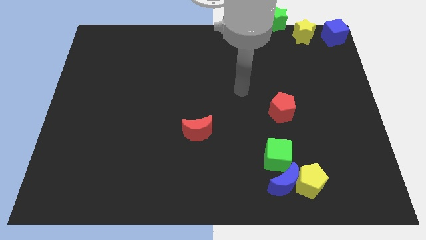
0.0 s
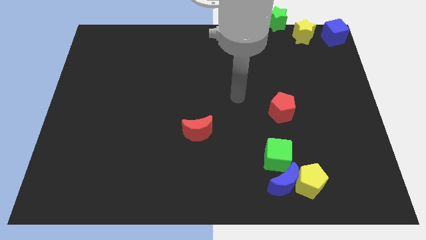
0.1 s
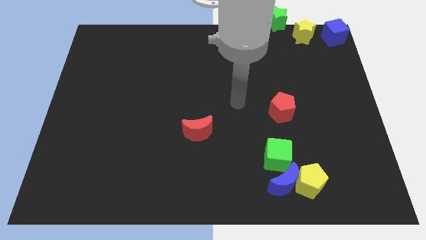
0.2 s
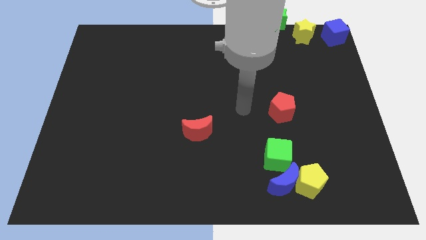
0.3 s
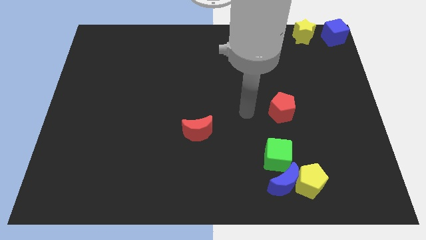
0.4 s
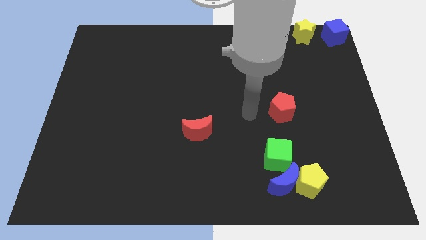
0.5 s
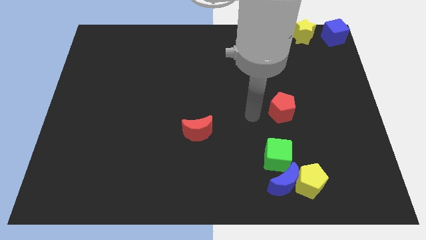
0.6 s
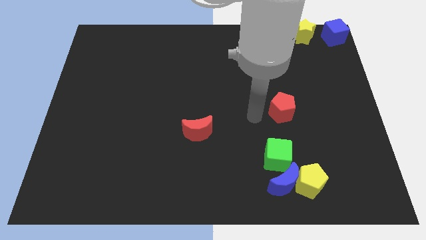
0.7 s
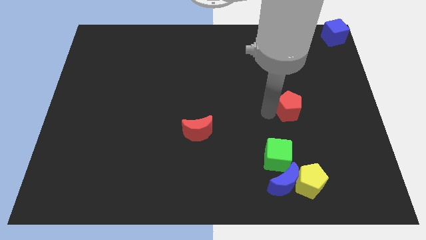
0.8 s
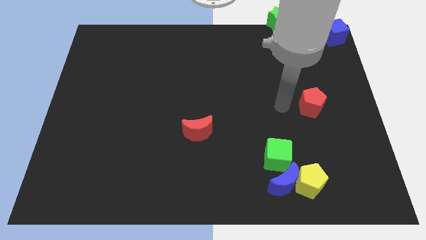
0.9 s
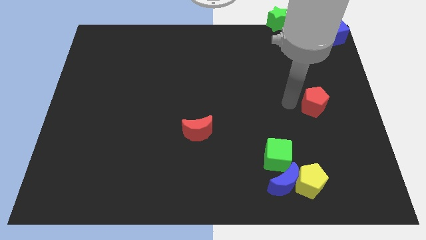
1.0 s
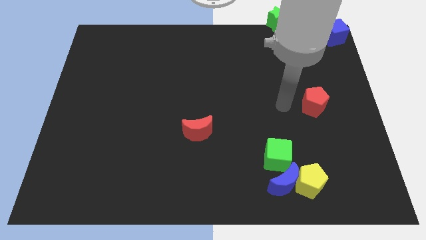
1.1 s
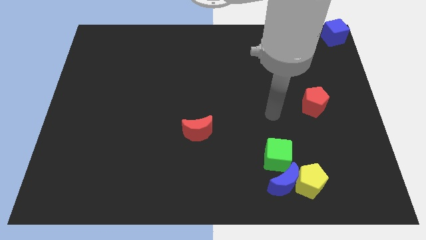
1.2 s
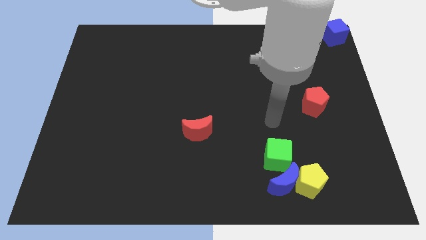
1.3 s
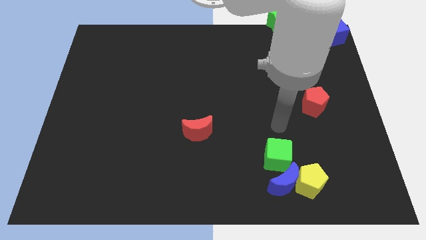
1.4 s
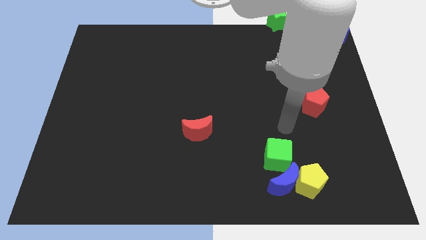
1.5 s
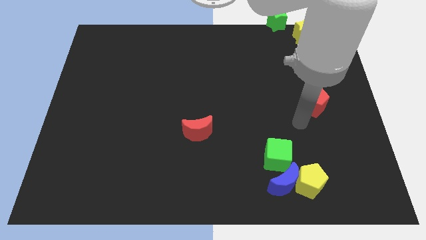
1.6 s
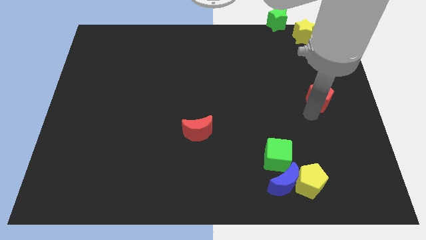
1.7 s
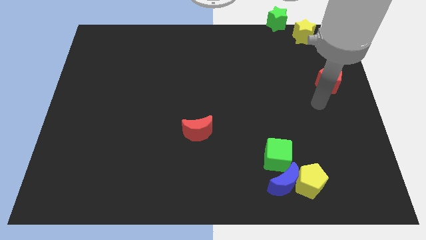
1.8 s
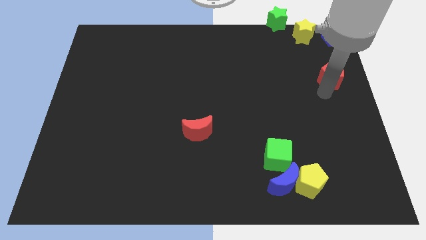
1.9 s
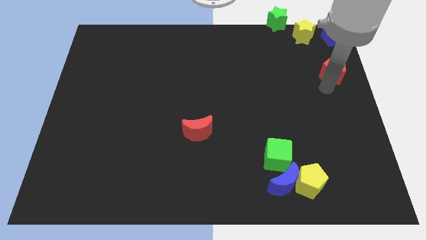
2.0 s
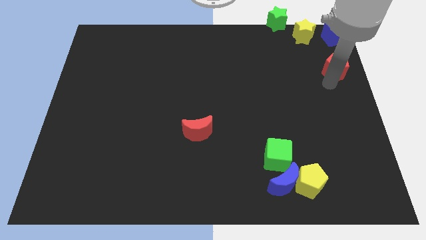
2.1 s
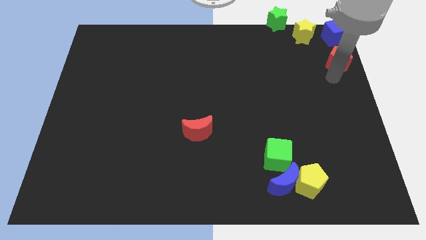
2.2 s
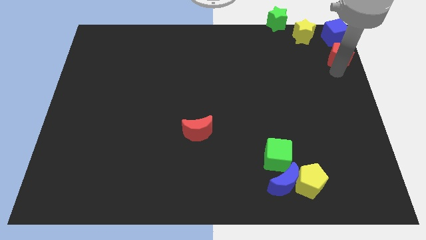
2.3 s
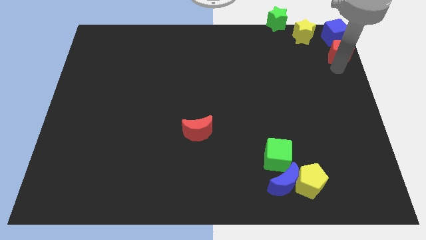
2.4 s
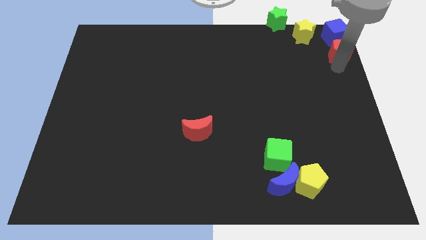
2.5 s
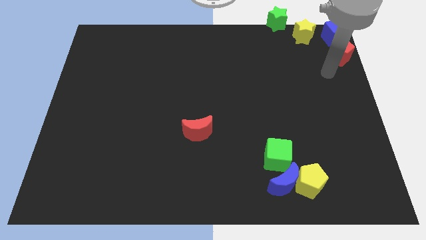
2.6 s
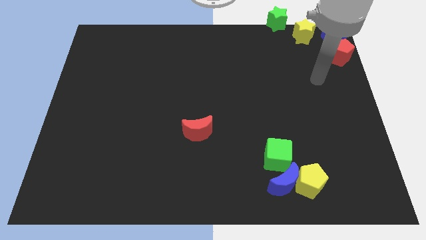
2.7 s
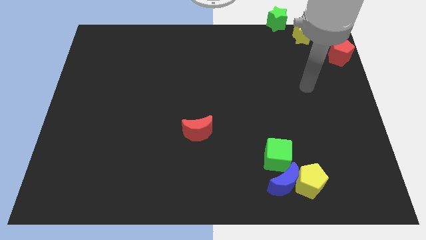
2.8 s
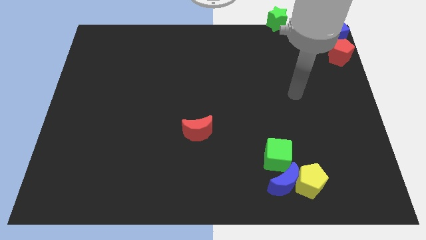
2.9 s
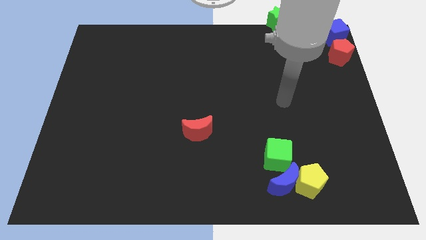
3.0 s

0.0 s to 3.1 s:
put the red pentagon below blue cube

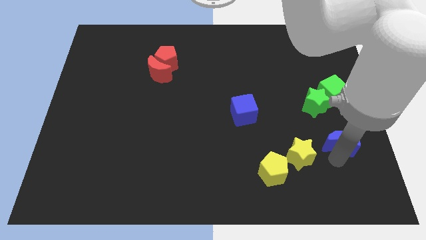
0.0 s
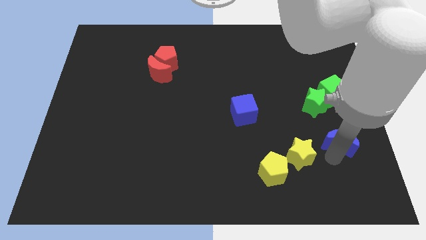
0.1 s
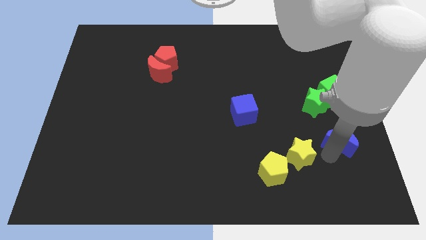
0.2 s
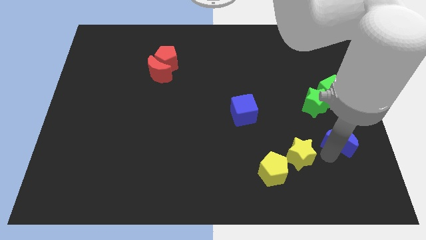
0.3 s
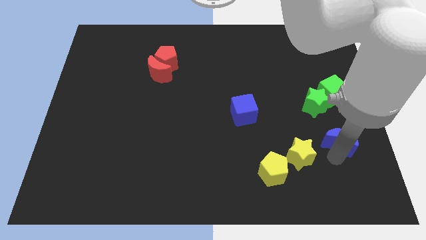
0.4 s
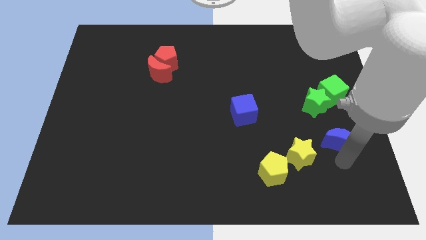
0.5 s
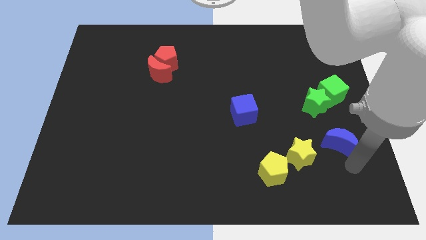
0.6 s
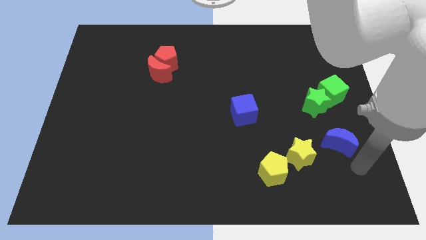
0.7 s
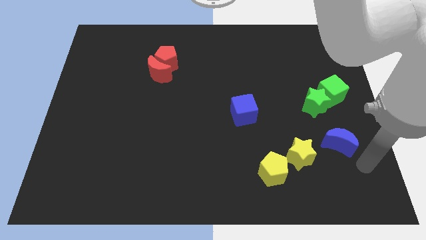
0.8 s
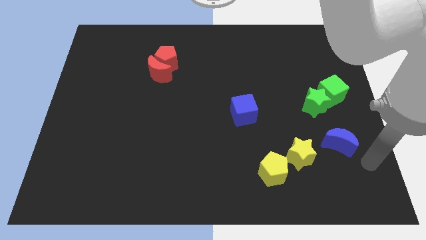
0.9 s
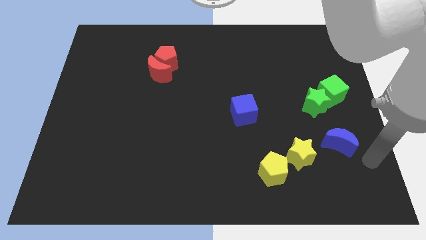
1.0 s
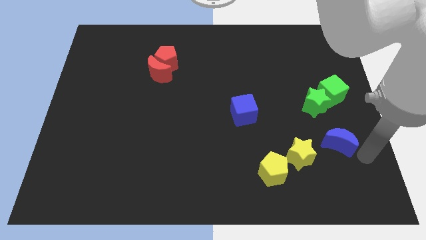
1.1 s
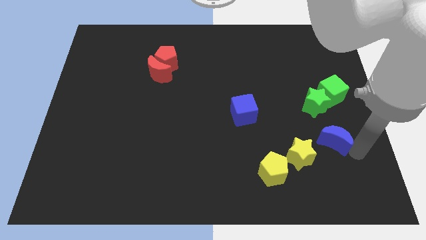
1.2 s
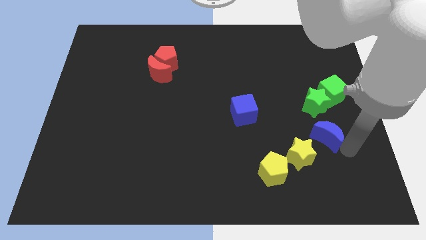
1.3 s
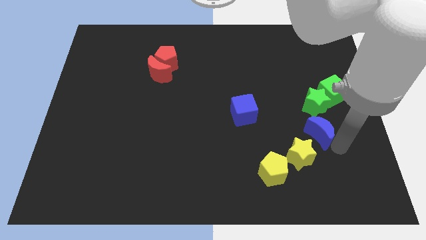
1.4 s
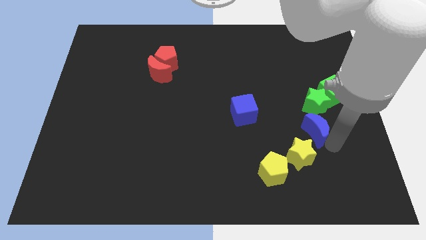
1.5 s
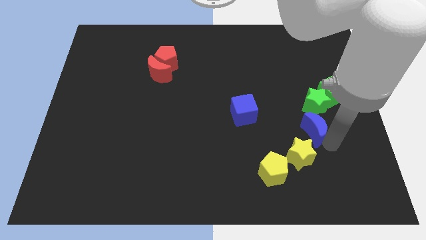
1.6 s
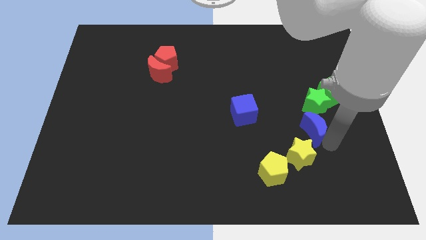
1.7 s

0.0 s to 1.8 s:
slide the blue moon diagonally top right to the yellow star

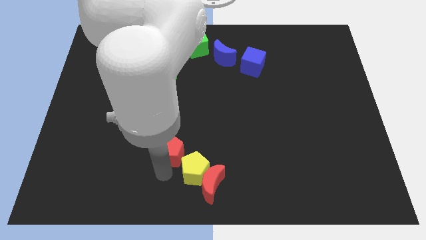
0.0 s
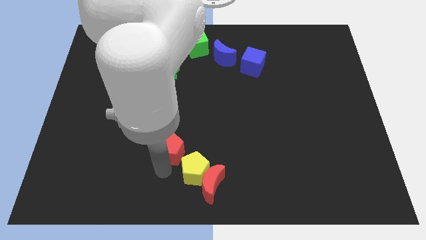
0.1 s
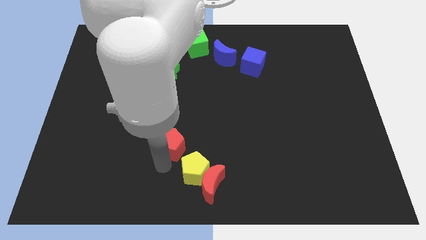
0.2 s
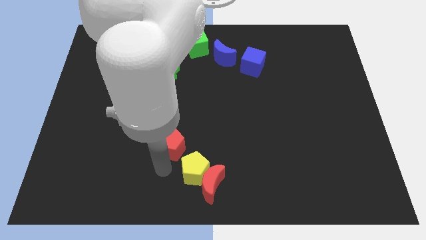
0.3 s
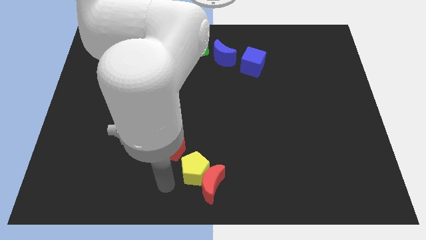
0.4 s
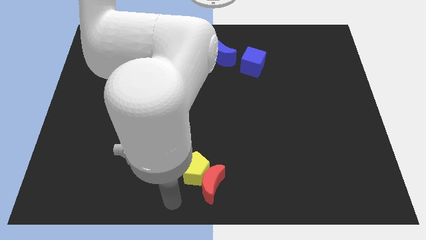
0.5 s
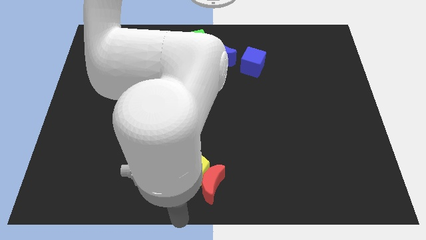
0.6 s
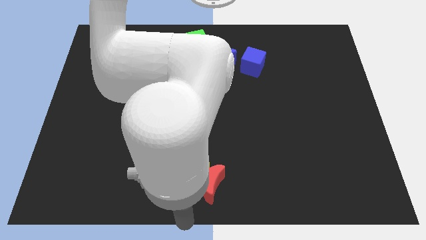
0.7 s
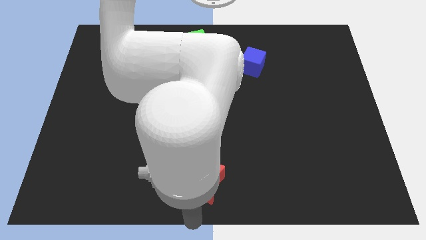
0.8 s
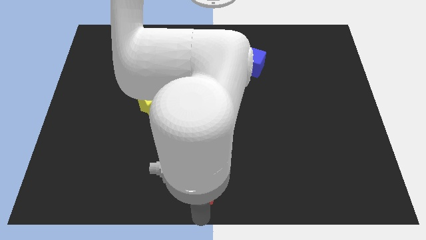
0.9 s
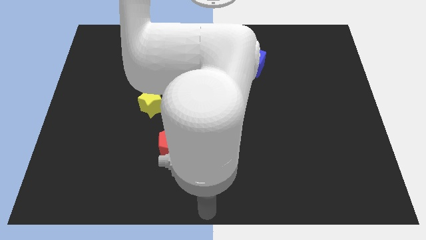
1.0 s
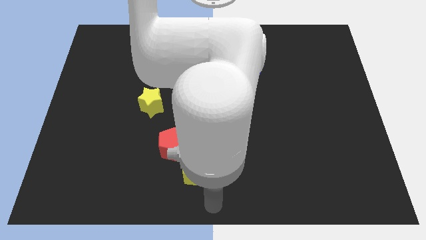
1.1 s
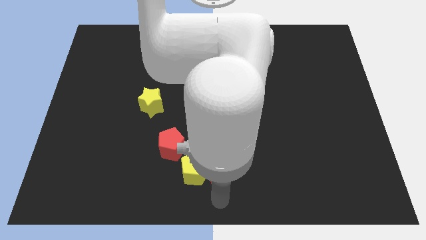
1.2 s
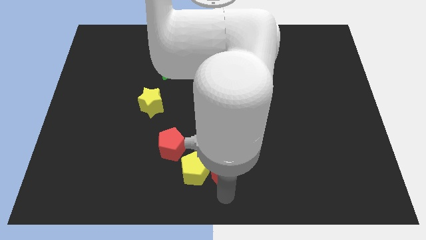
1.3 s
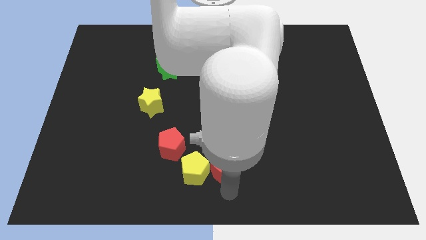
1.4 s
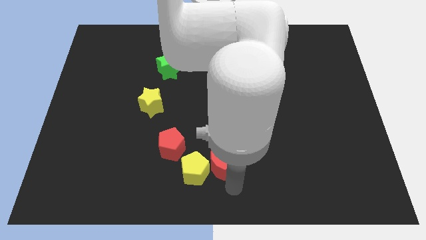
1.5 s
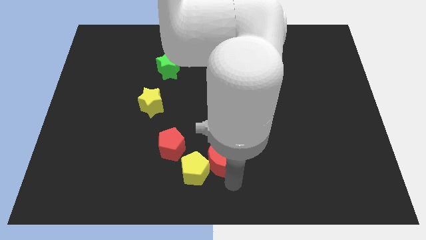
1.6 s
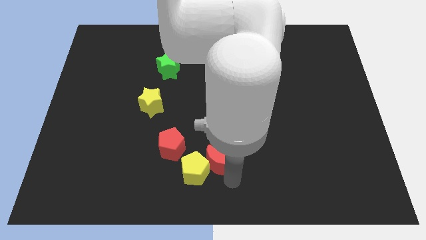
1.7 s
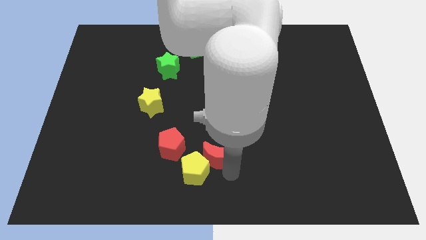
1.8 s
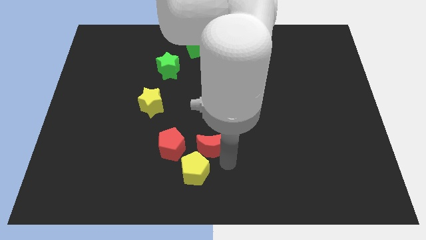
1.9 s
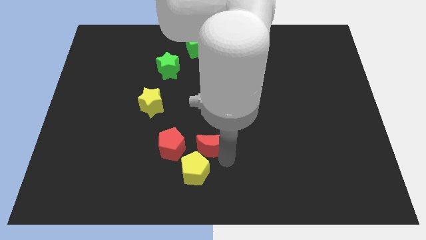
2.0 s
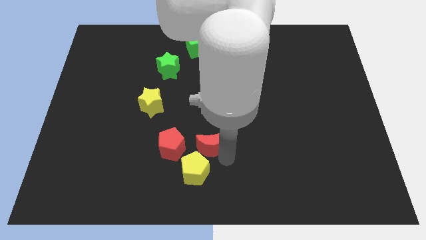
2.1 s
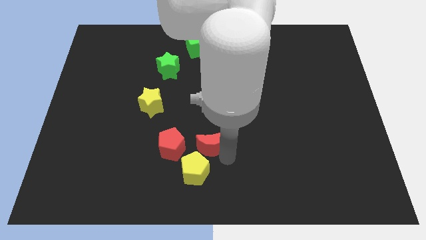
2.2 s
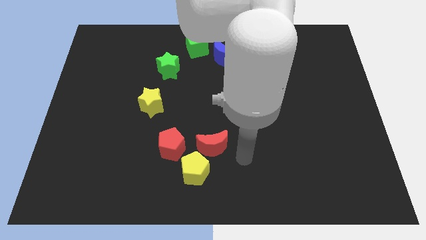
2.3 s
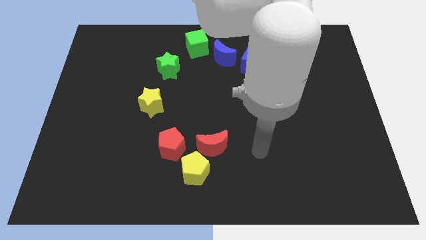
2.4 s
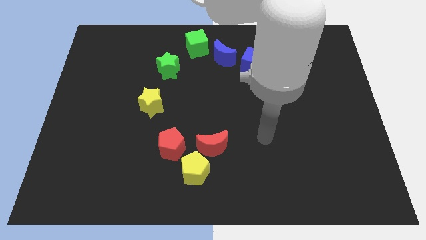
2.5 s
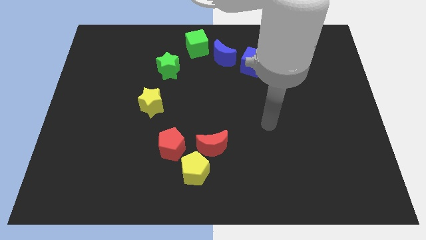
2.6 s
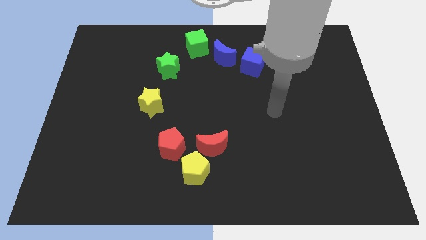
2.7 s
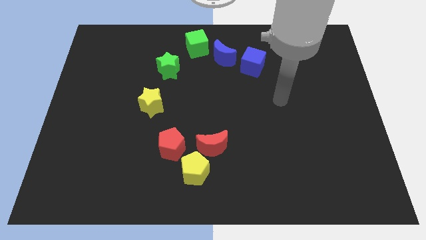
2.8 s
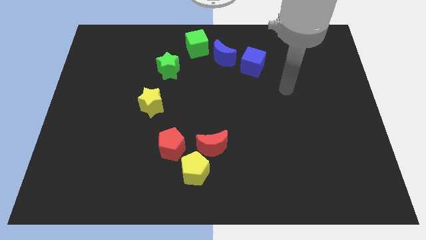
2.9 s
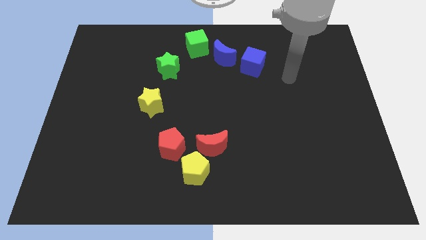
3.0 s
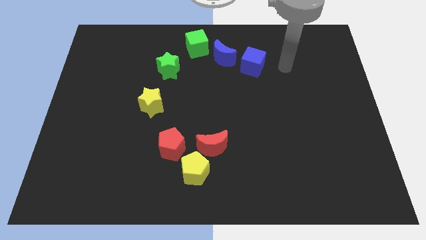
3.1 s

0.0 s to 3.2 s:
place the red crescent to parallel right to red pentagon

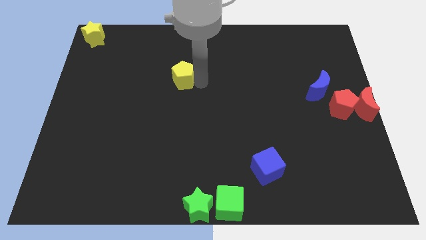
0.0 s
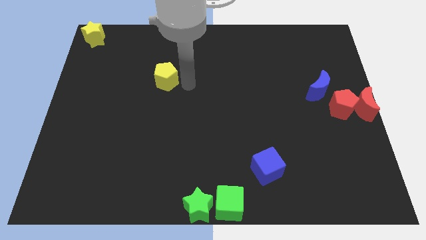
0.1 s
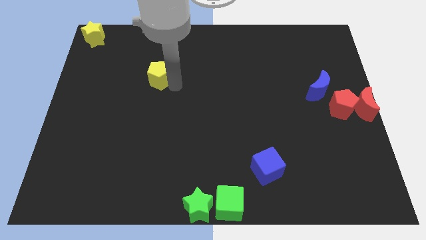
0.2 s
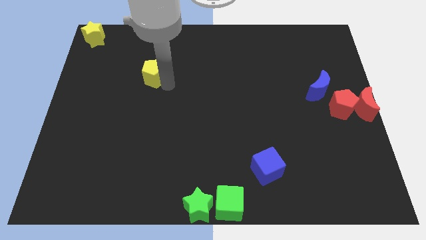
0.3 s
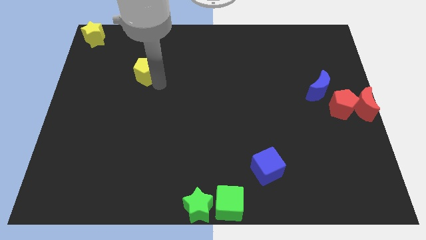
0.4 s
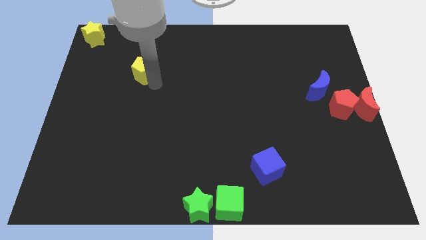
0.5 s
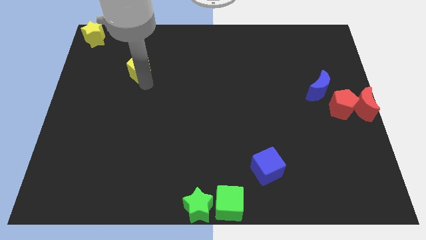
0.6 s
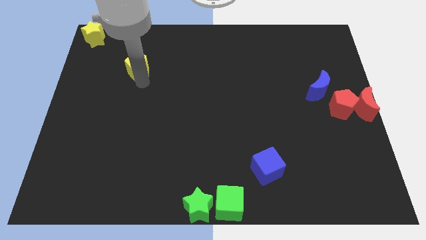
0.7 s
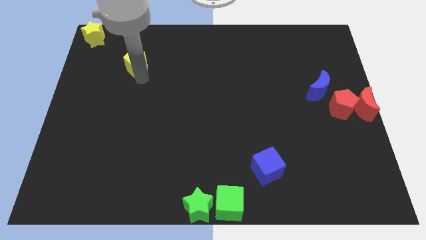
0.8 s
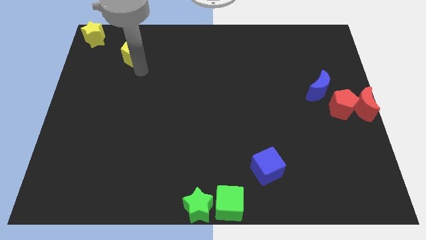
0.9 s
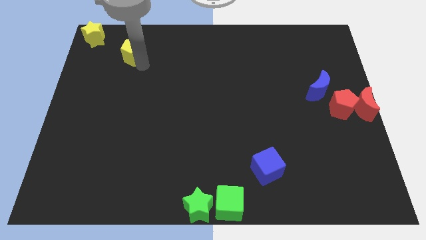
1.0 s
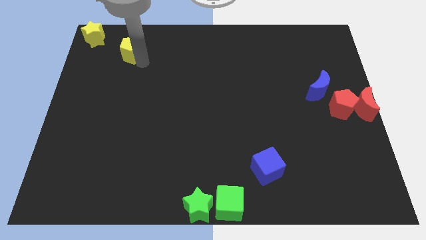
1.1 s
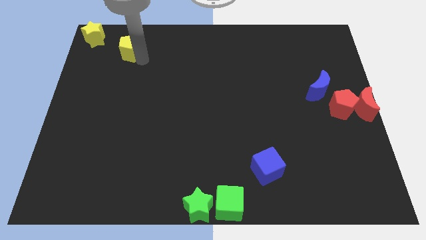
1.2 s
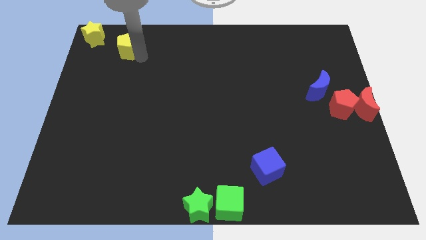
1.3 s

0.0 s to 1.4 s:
move the yellow pentagon right beside the yellow star
